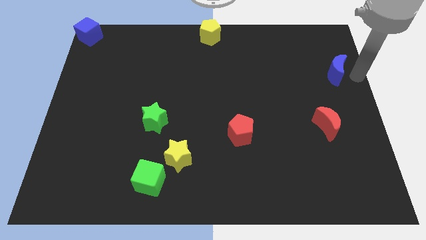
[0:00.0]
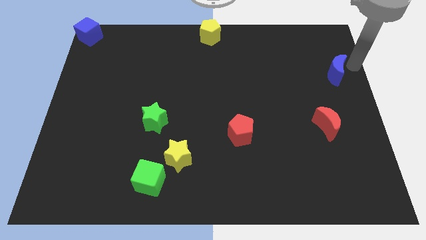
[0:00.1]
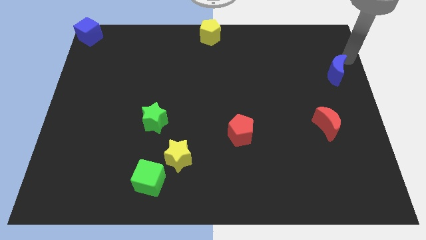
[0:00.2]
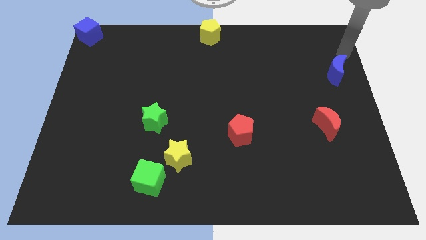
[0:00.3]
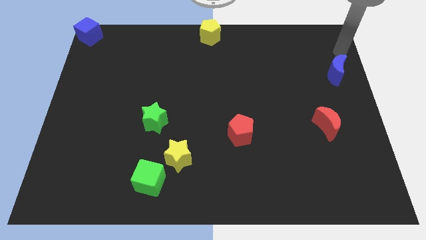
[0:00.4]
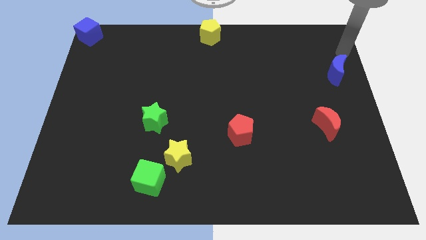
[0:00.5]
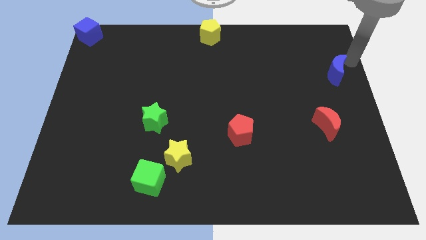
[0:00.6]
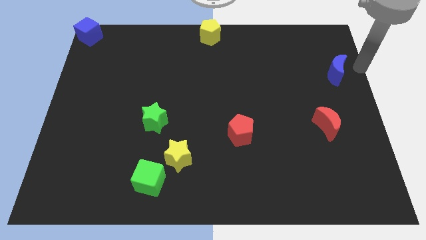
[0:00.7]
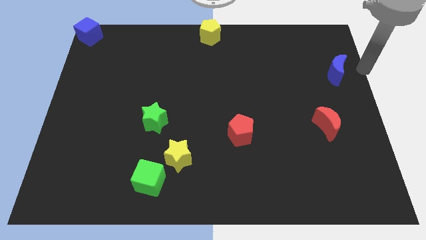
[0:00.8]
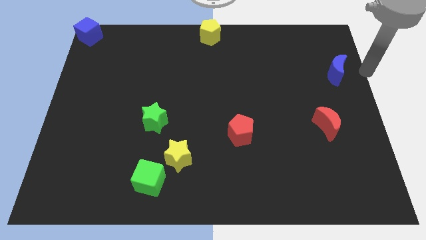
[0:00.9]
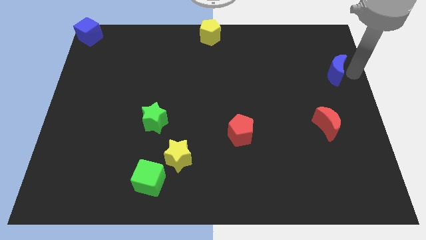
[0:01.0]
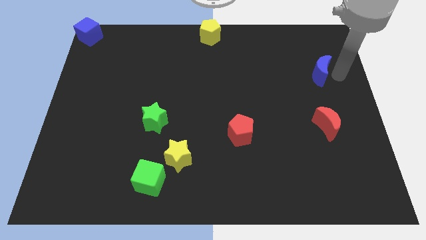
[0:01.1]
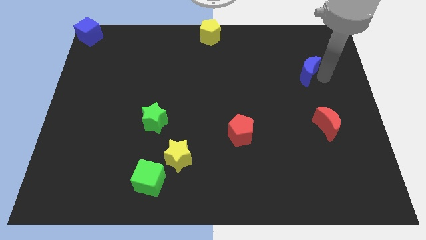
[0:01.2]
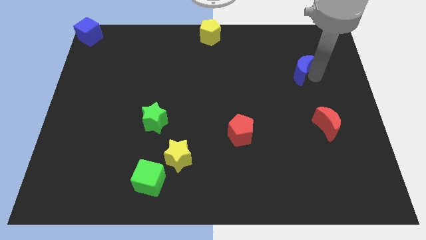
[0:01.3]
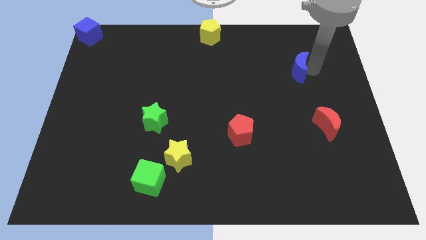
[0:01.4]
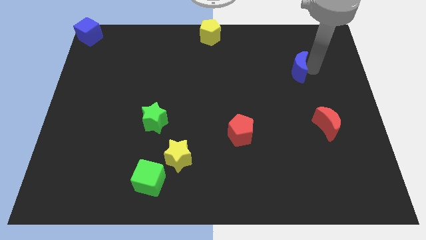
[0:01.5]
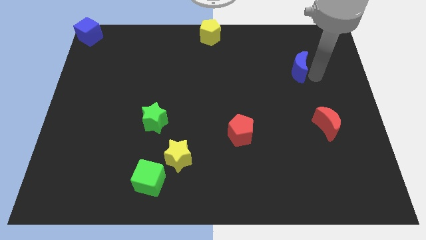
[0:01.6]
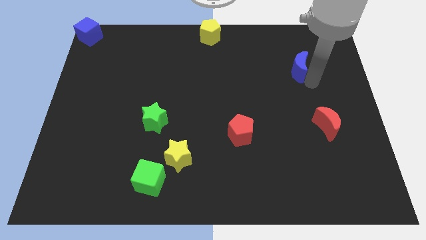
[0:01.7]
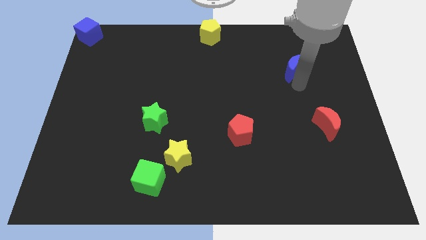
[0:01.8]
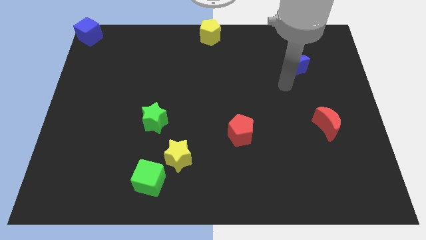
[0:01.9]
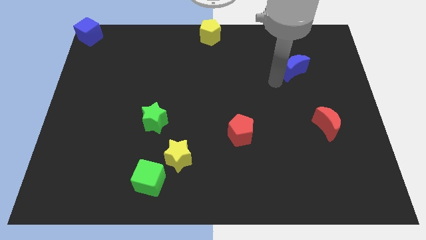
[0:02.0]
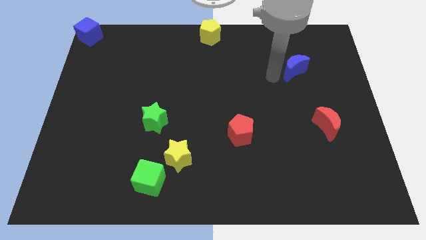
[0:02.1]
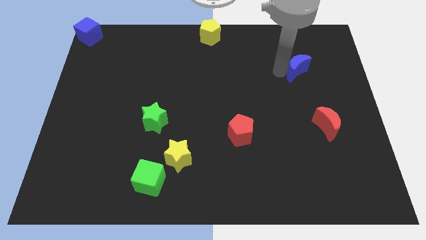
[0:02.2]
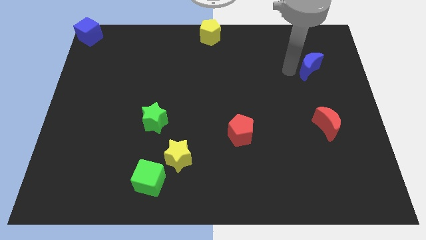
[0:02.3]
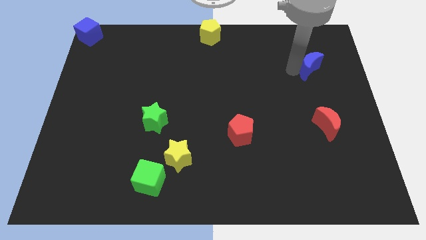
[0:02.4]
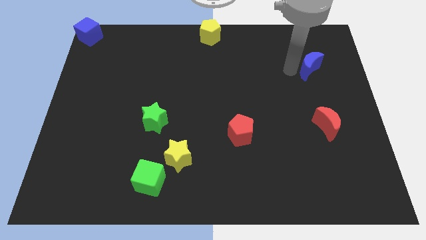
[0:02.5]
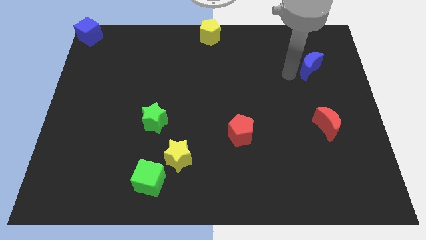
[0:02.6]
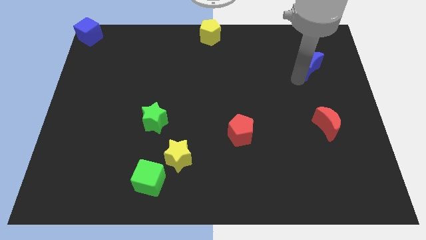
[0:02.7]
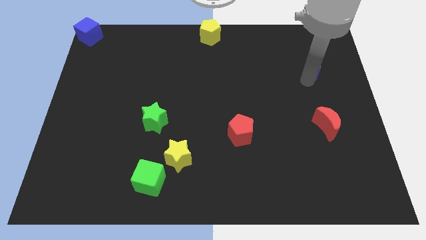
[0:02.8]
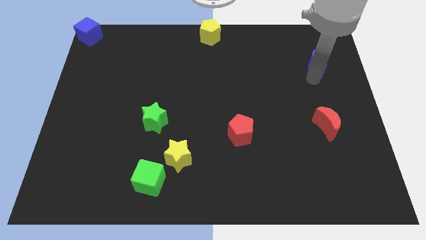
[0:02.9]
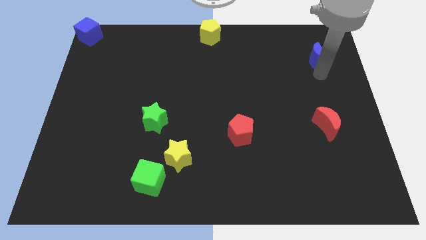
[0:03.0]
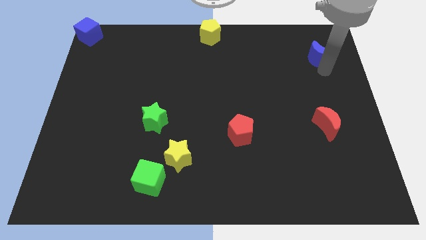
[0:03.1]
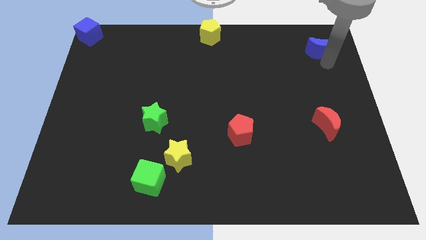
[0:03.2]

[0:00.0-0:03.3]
move the blue moon towards top right

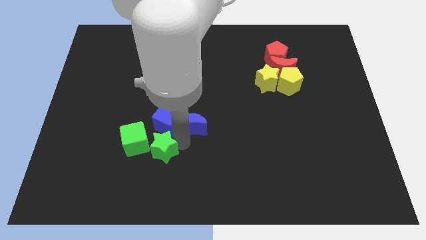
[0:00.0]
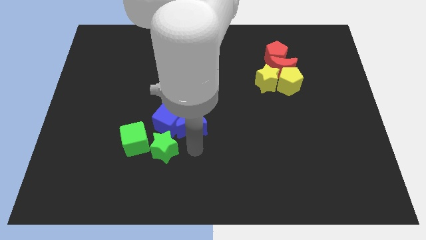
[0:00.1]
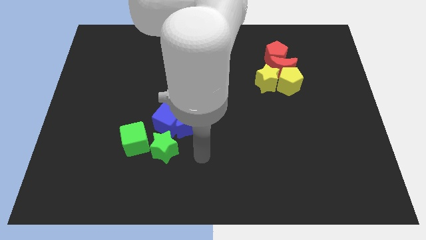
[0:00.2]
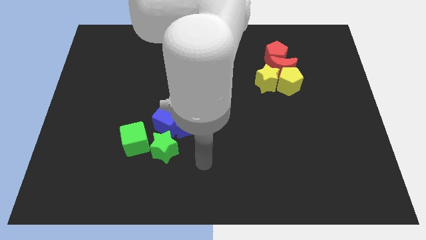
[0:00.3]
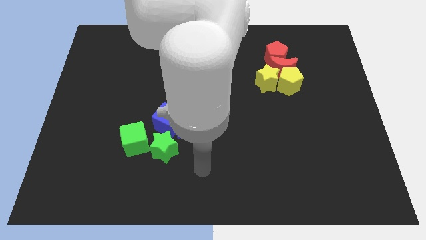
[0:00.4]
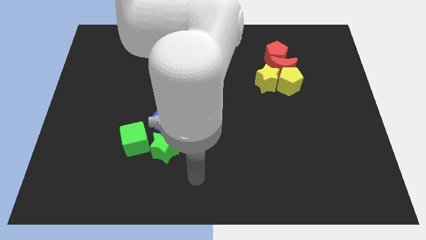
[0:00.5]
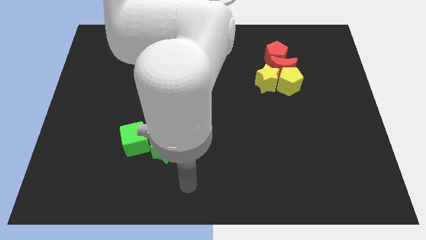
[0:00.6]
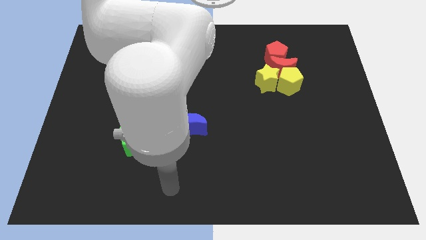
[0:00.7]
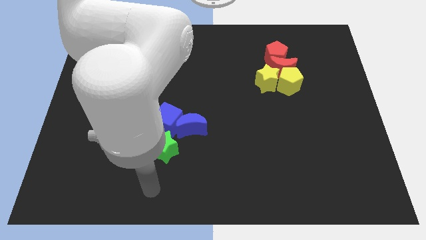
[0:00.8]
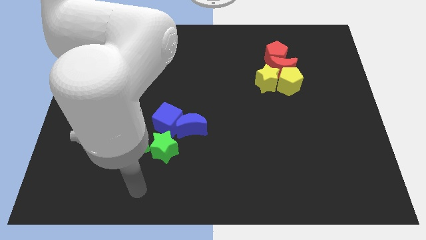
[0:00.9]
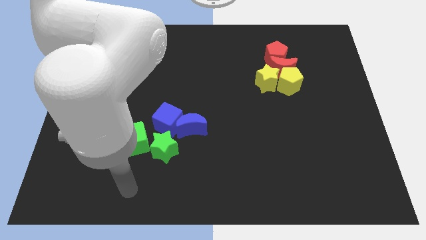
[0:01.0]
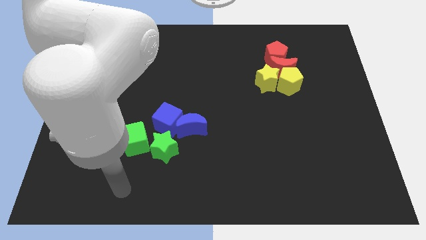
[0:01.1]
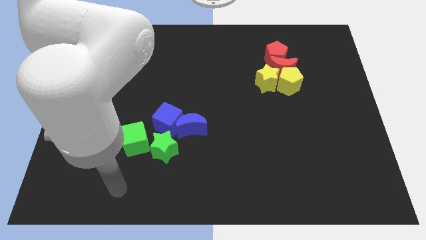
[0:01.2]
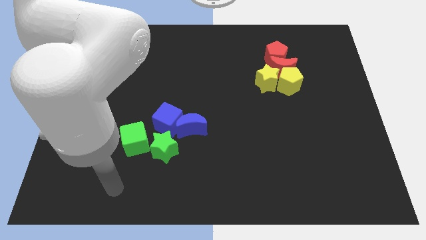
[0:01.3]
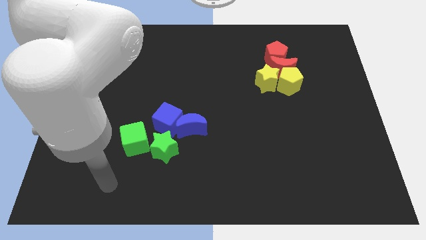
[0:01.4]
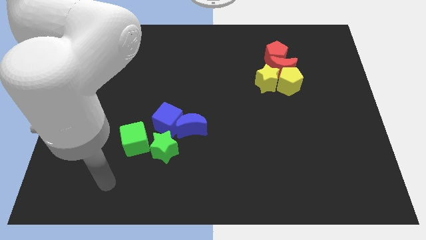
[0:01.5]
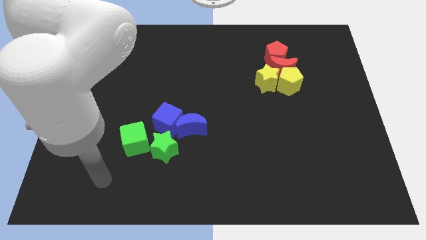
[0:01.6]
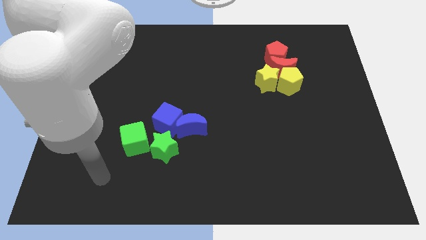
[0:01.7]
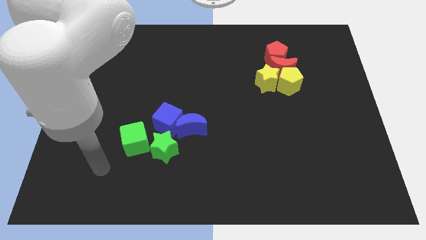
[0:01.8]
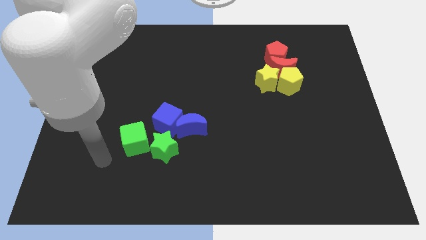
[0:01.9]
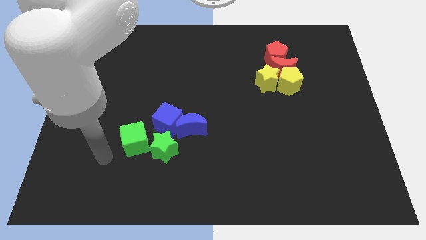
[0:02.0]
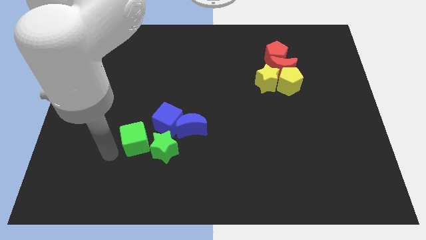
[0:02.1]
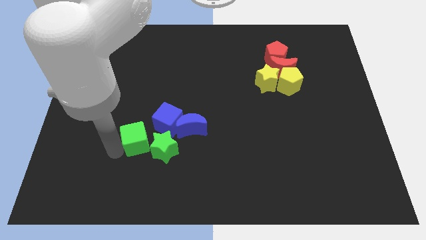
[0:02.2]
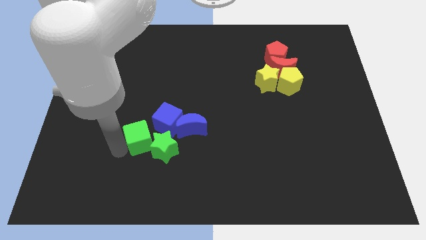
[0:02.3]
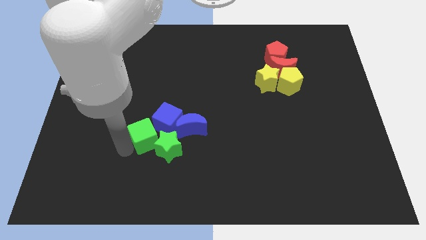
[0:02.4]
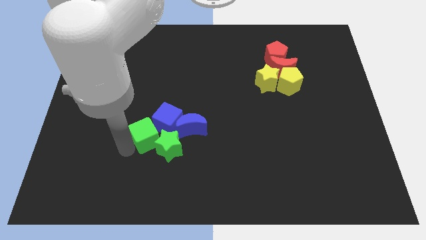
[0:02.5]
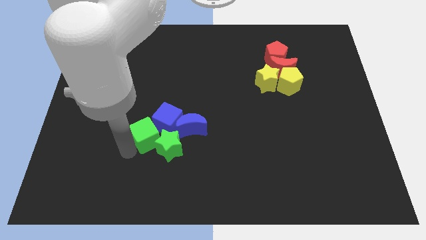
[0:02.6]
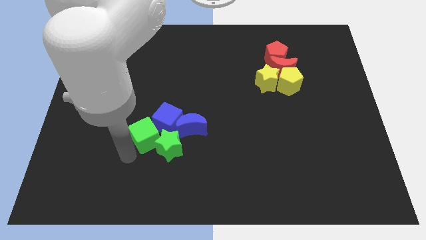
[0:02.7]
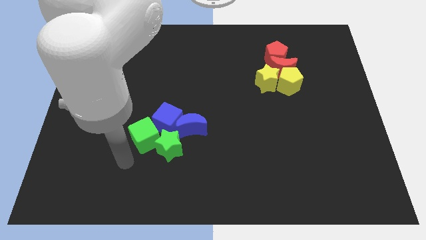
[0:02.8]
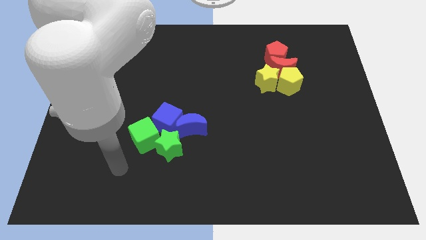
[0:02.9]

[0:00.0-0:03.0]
push the green blocks into the blue blocks

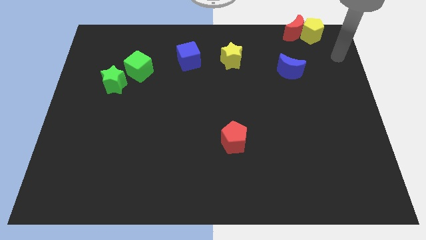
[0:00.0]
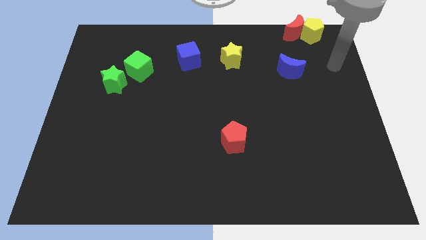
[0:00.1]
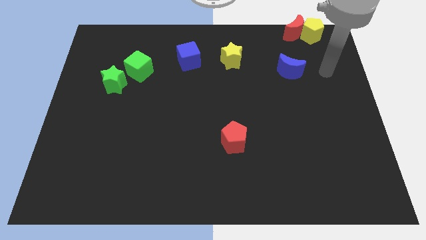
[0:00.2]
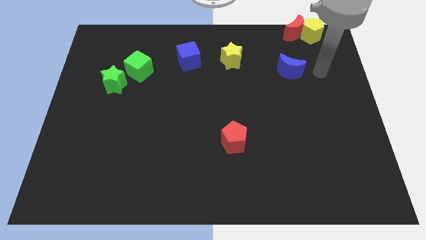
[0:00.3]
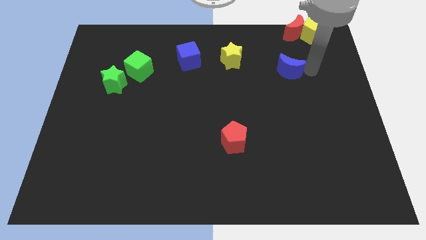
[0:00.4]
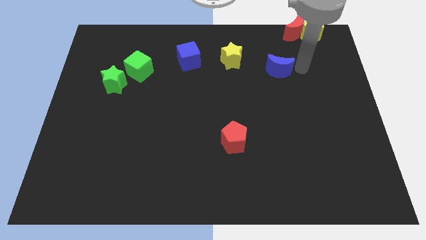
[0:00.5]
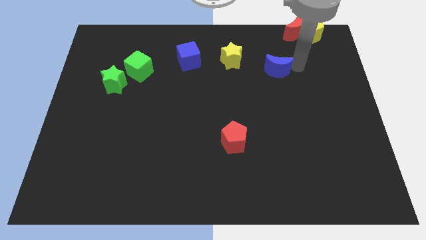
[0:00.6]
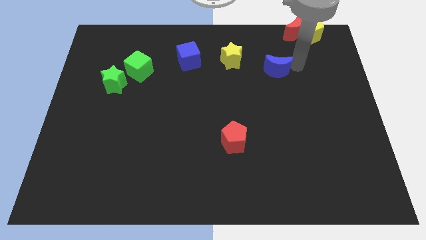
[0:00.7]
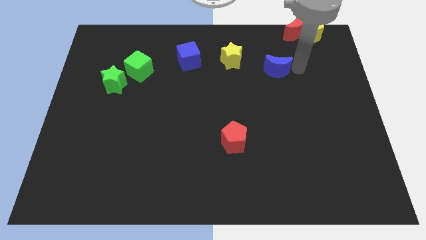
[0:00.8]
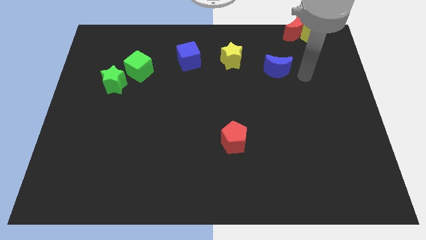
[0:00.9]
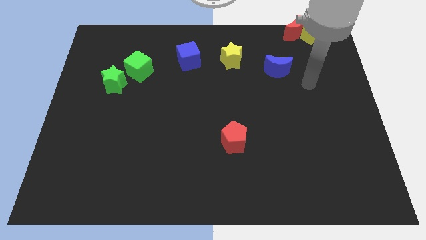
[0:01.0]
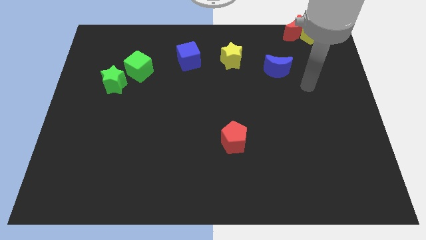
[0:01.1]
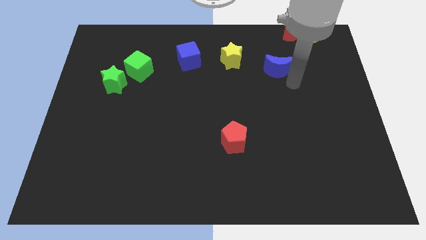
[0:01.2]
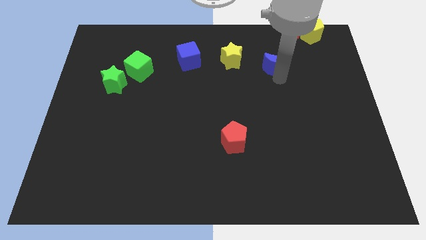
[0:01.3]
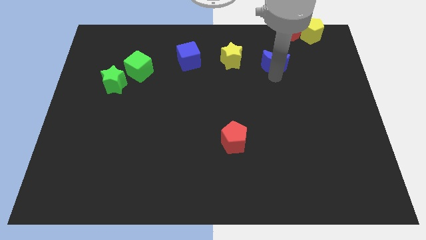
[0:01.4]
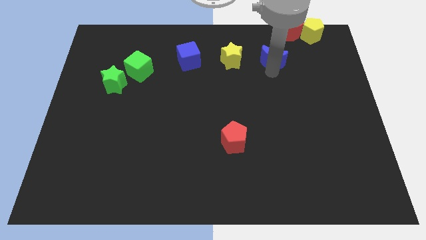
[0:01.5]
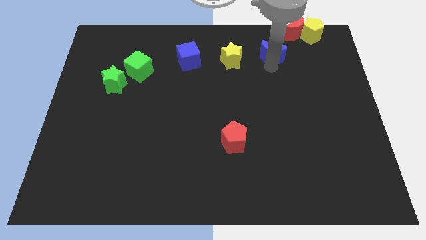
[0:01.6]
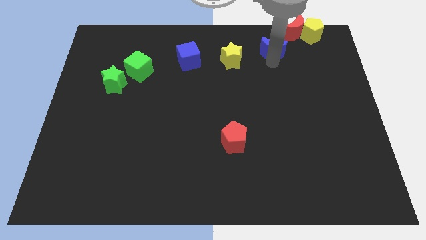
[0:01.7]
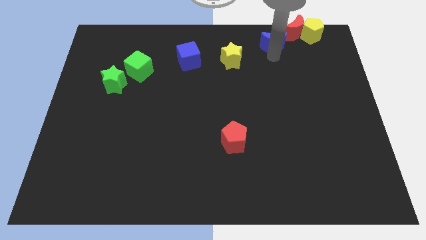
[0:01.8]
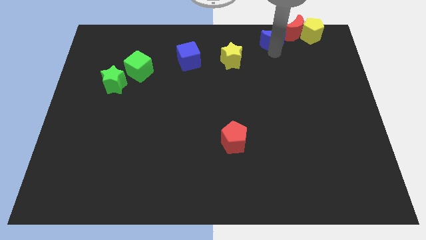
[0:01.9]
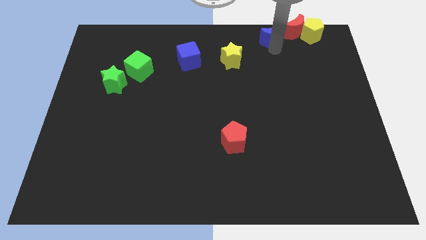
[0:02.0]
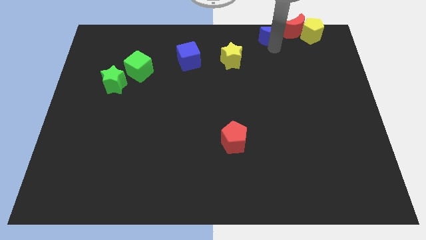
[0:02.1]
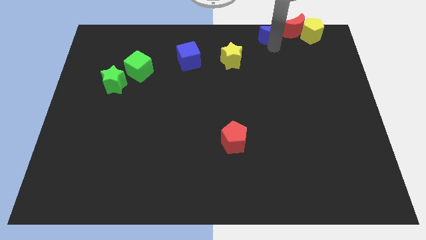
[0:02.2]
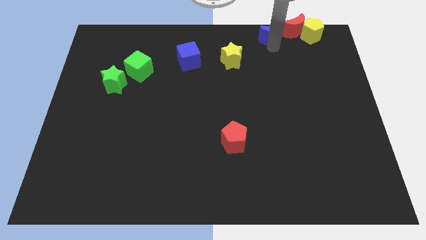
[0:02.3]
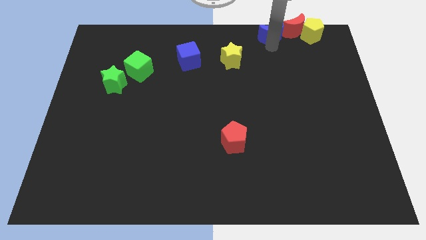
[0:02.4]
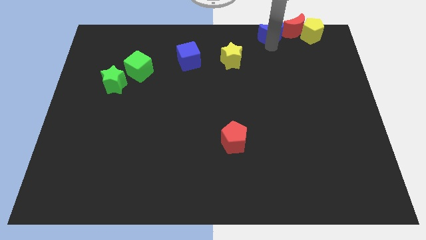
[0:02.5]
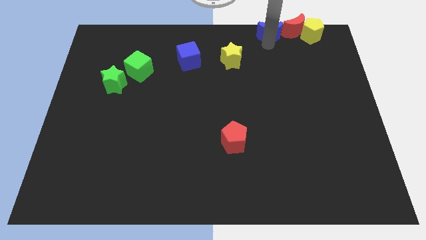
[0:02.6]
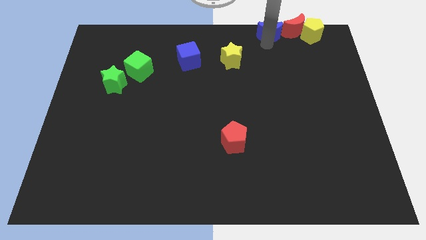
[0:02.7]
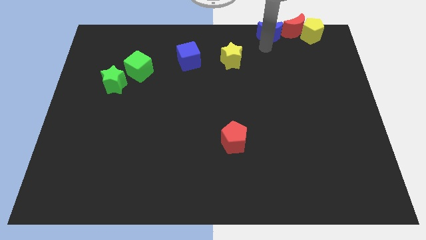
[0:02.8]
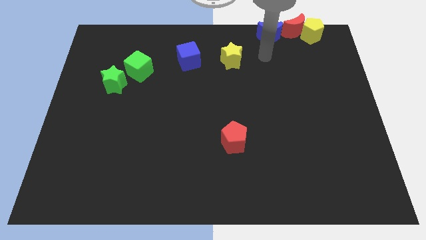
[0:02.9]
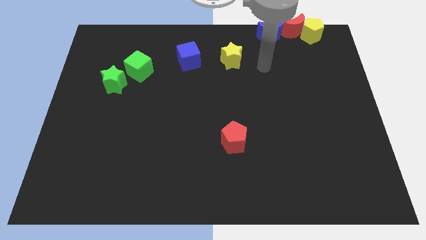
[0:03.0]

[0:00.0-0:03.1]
push the blue crescent into the red crescent
